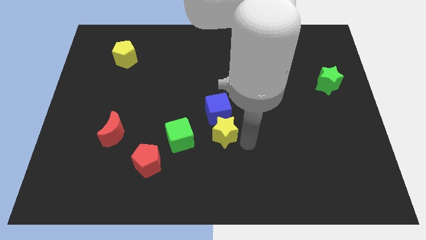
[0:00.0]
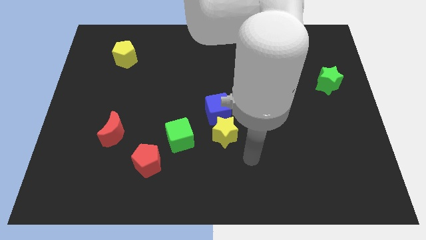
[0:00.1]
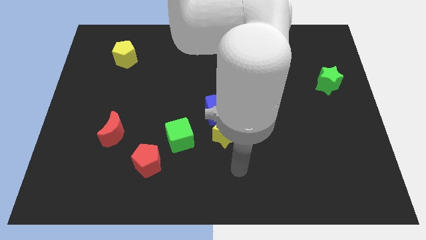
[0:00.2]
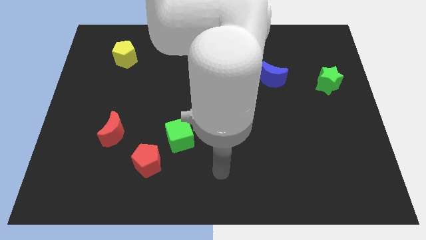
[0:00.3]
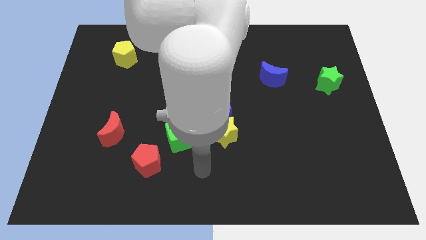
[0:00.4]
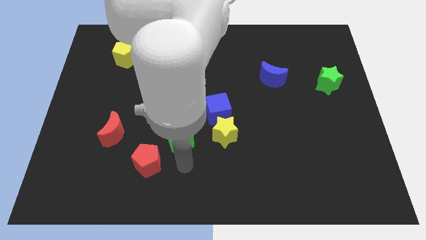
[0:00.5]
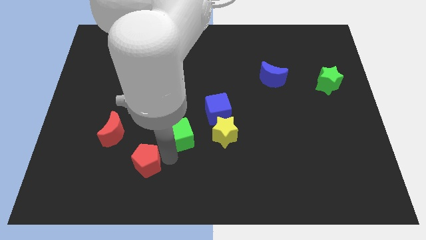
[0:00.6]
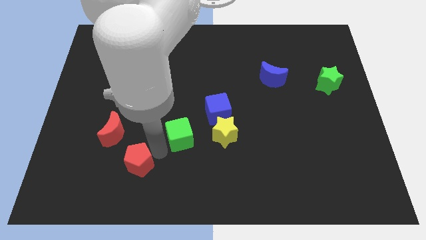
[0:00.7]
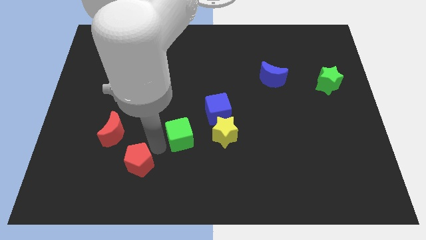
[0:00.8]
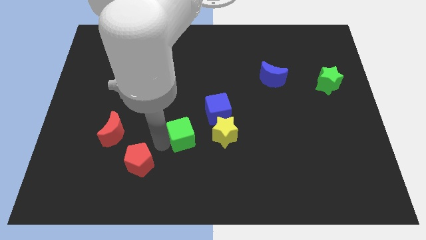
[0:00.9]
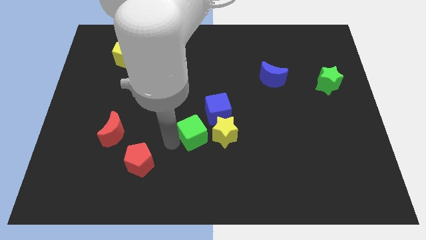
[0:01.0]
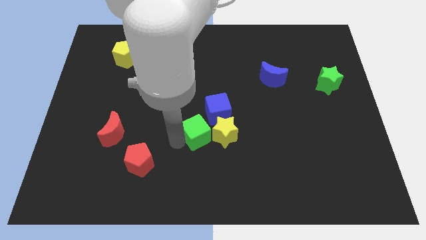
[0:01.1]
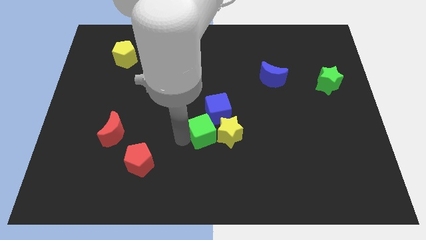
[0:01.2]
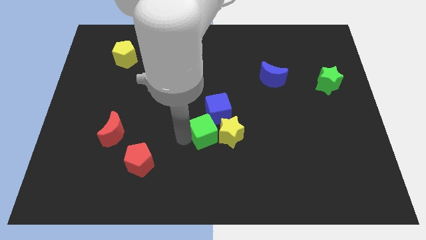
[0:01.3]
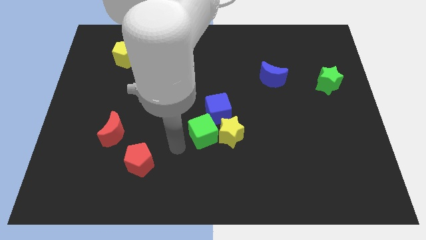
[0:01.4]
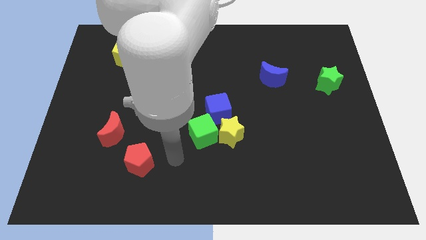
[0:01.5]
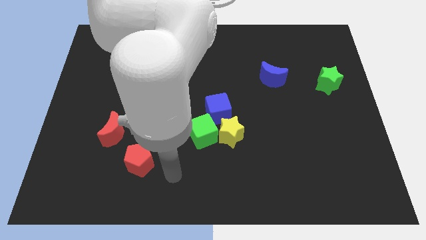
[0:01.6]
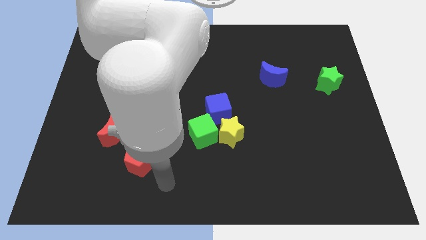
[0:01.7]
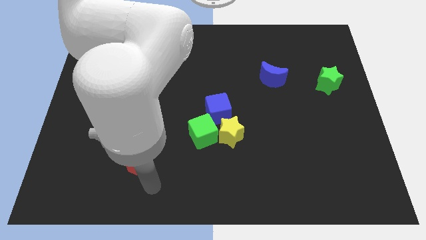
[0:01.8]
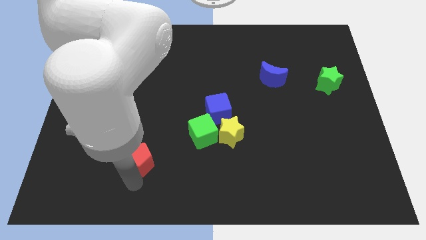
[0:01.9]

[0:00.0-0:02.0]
push the green cube into the both yellow star and blue cube

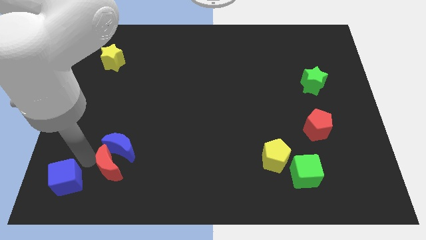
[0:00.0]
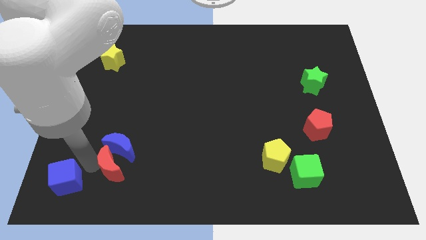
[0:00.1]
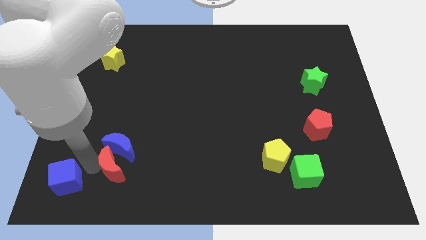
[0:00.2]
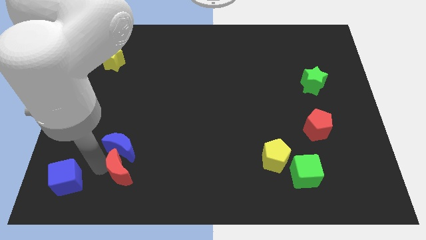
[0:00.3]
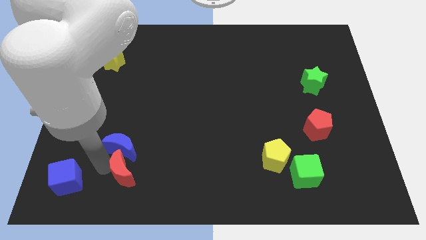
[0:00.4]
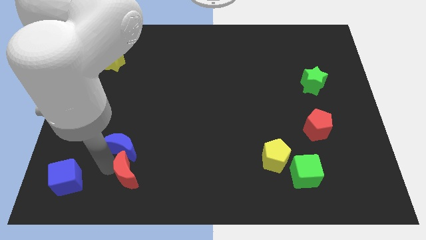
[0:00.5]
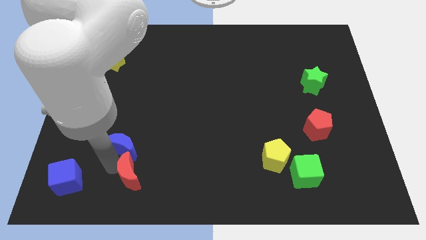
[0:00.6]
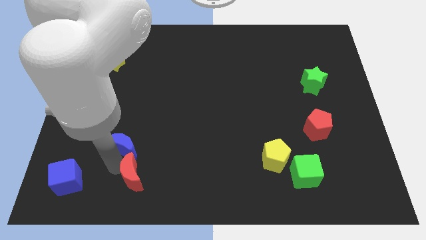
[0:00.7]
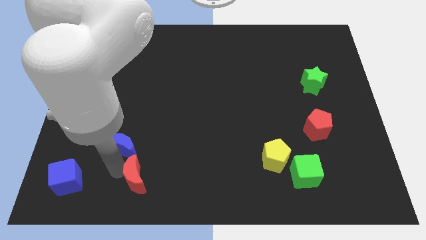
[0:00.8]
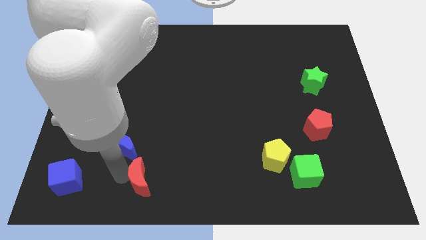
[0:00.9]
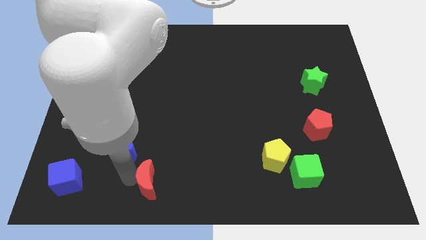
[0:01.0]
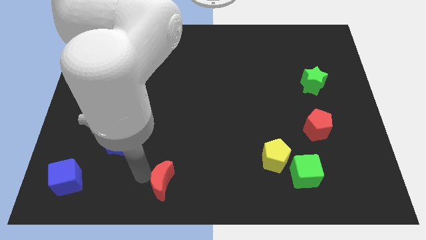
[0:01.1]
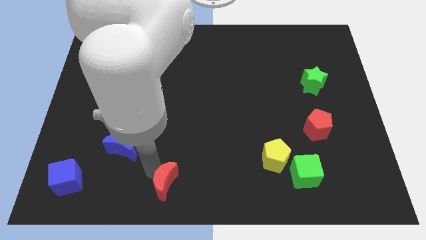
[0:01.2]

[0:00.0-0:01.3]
push red moon slightly down

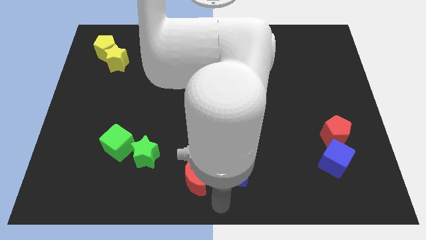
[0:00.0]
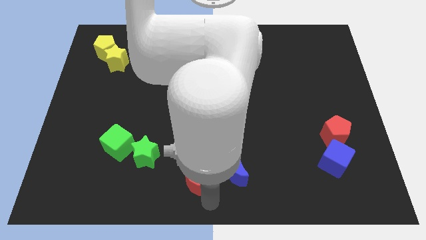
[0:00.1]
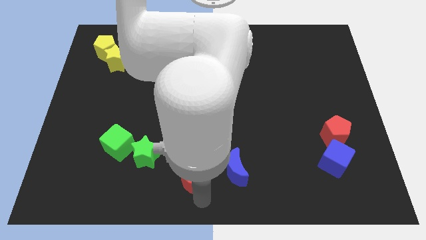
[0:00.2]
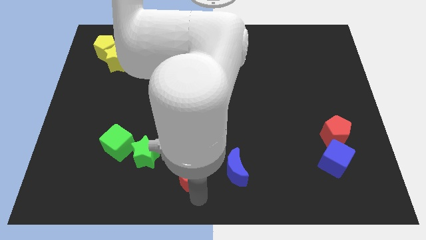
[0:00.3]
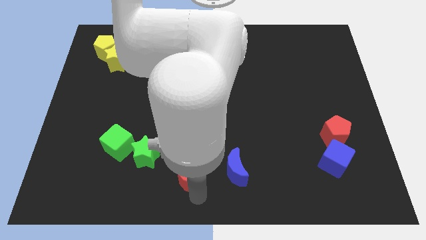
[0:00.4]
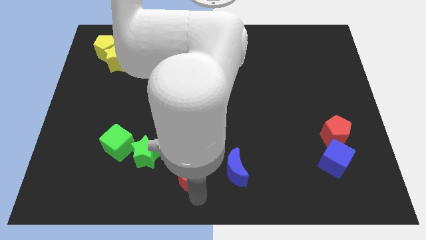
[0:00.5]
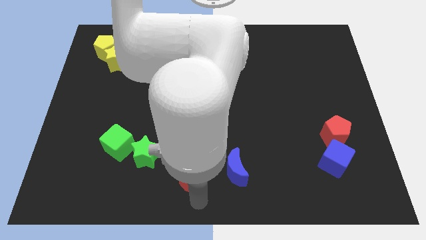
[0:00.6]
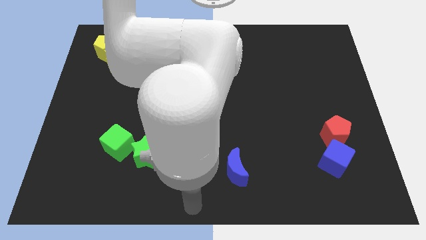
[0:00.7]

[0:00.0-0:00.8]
push the red crescent to the left of the blue crescent

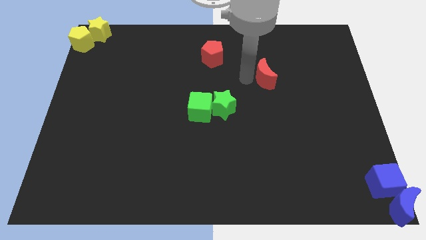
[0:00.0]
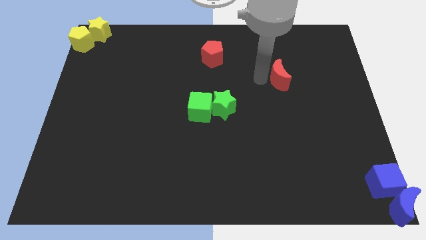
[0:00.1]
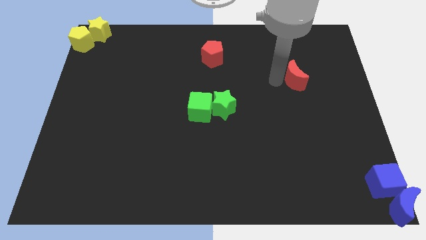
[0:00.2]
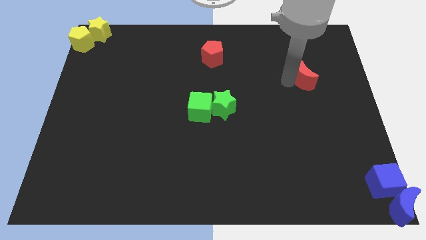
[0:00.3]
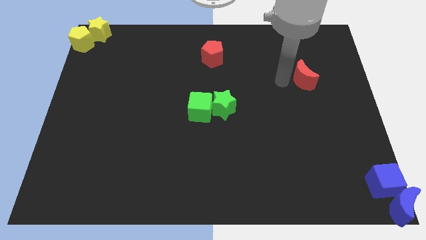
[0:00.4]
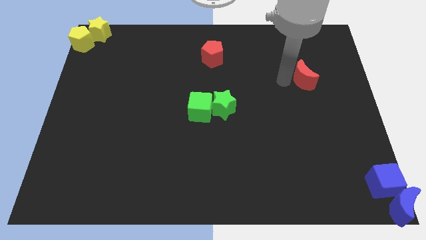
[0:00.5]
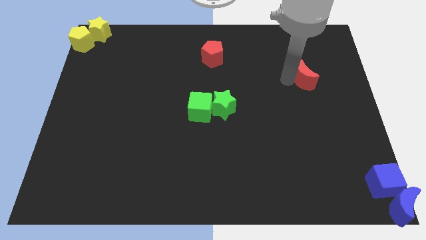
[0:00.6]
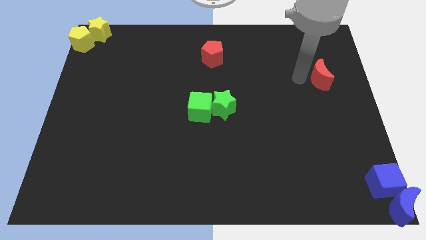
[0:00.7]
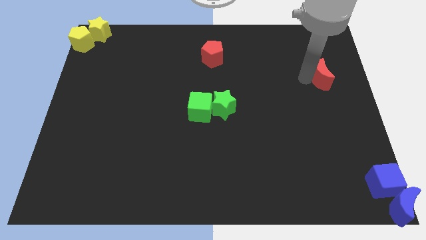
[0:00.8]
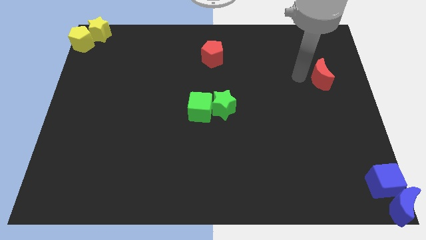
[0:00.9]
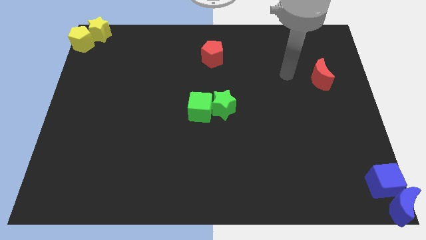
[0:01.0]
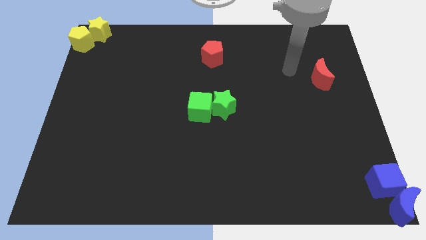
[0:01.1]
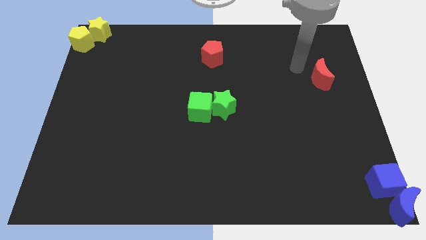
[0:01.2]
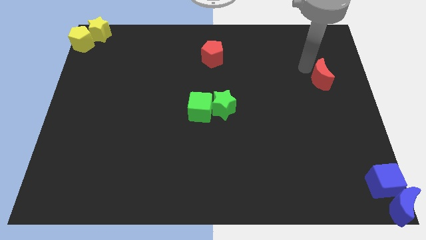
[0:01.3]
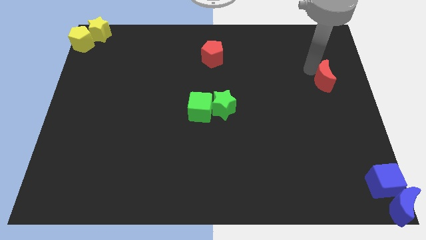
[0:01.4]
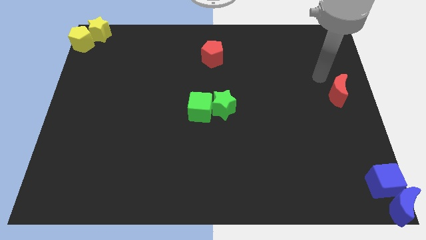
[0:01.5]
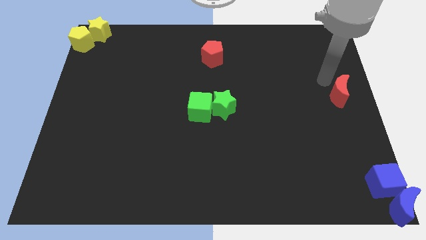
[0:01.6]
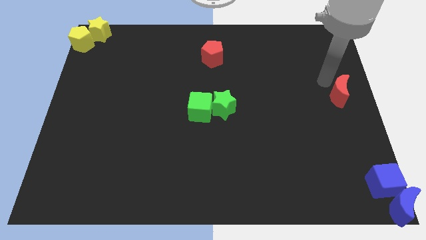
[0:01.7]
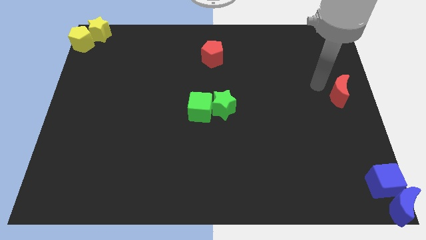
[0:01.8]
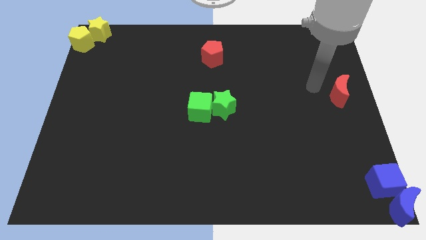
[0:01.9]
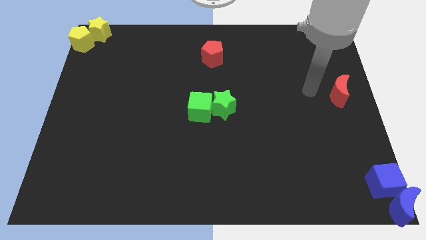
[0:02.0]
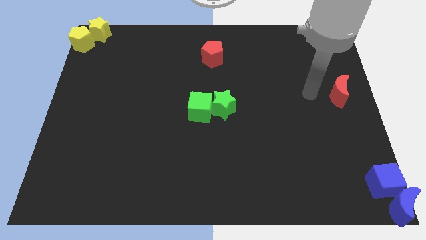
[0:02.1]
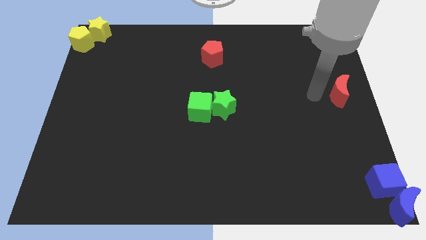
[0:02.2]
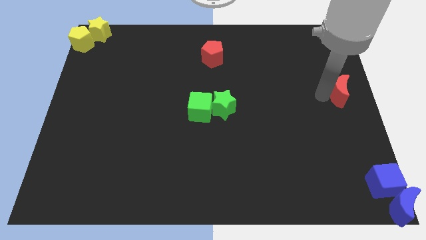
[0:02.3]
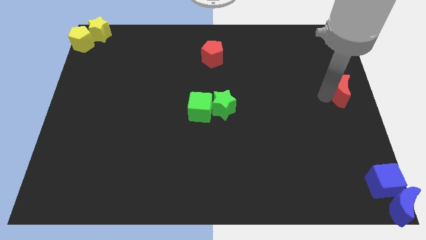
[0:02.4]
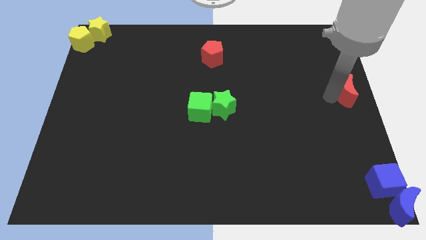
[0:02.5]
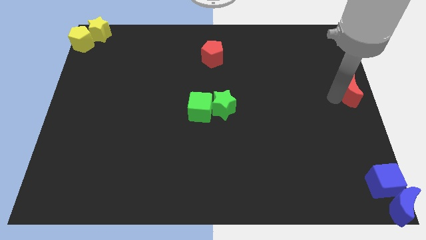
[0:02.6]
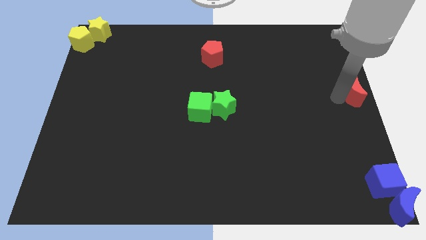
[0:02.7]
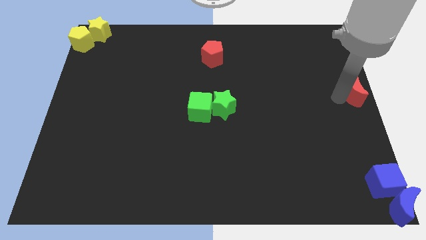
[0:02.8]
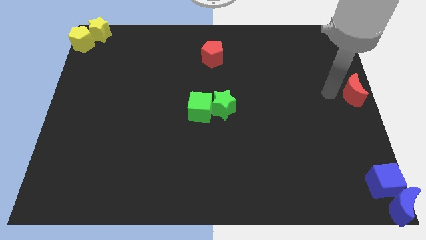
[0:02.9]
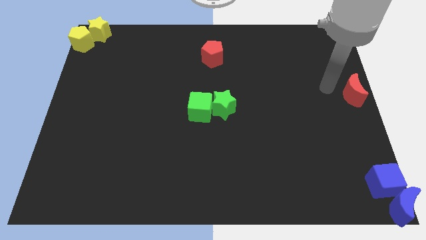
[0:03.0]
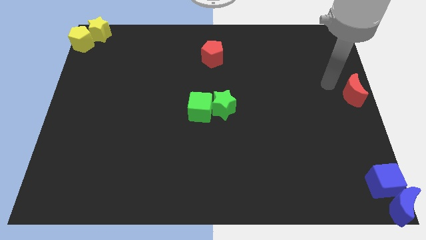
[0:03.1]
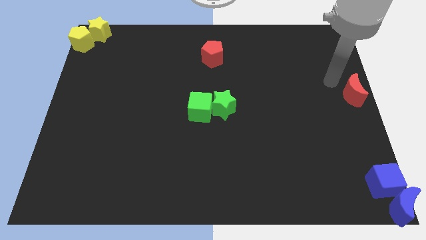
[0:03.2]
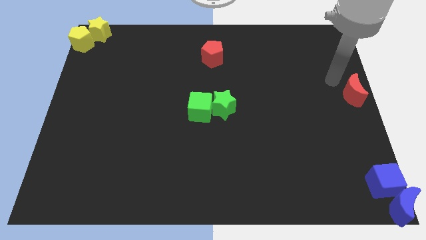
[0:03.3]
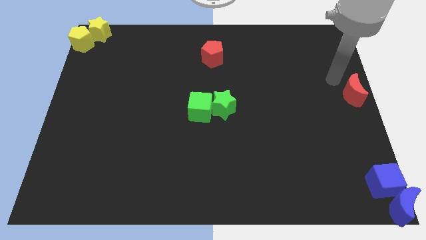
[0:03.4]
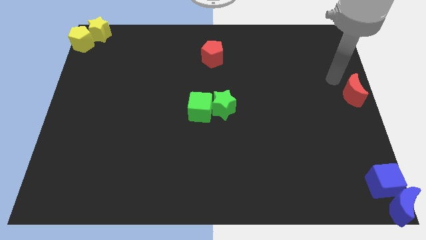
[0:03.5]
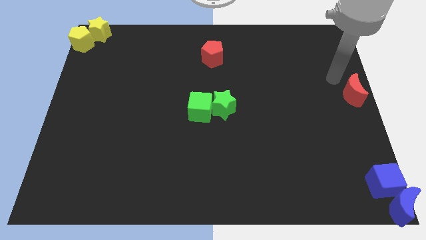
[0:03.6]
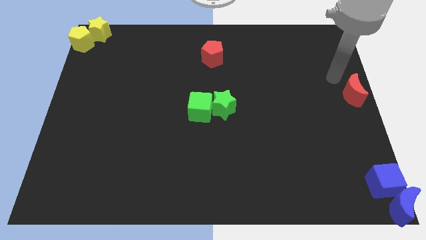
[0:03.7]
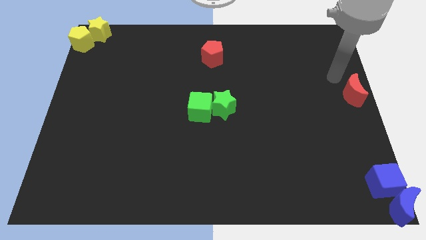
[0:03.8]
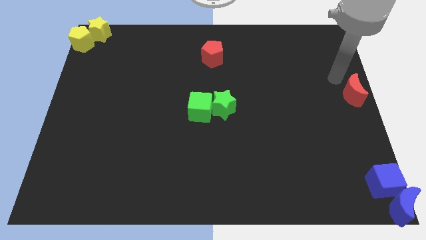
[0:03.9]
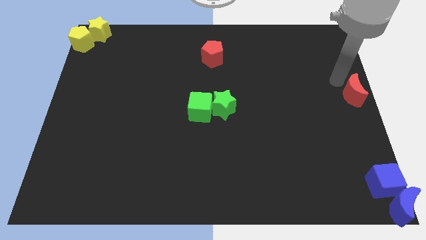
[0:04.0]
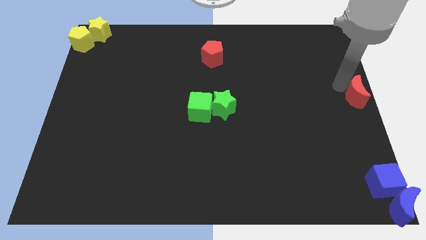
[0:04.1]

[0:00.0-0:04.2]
move the red crescent vertically above the blue cube

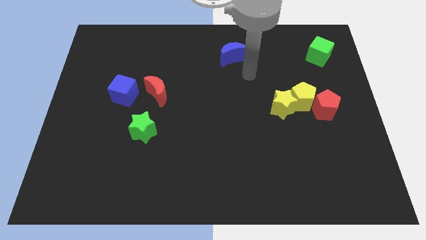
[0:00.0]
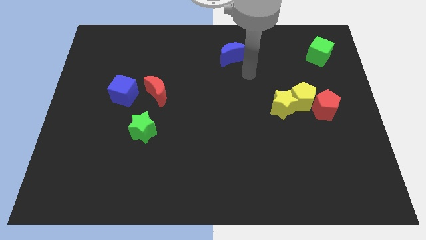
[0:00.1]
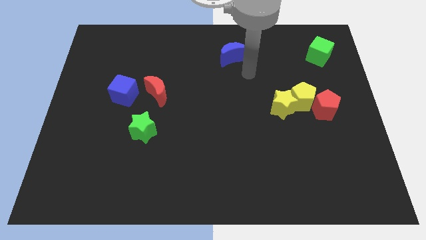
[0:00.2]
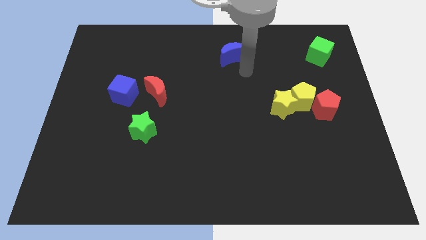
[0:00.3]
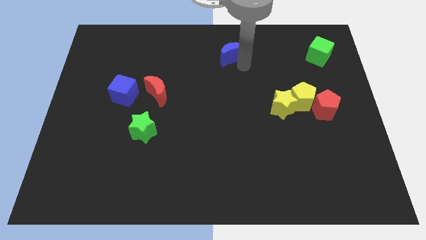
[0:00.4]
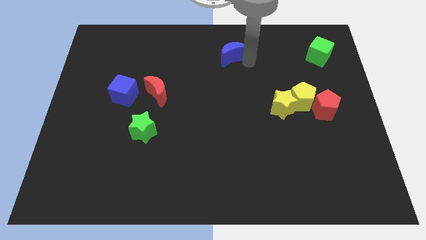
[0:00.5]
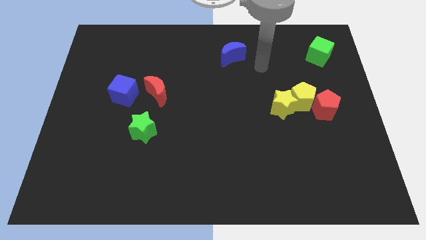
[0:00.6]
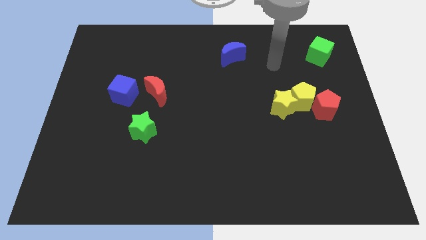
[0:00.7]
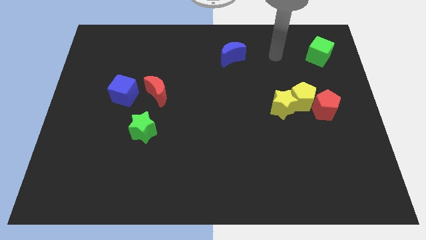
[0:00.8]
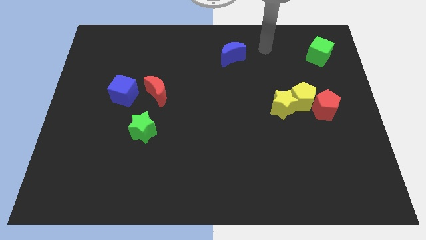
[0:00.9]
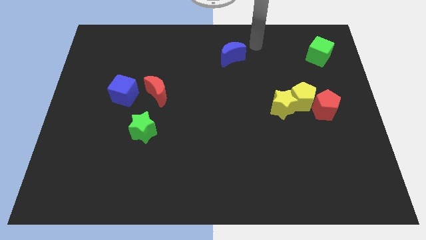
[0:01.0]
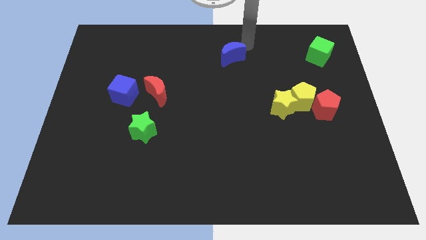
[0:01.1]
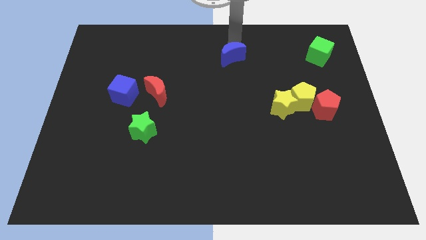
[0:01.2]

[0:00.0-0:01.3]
put your hand above the blue moon
